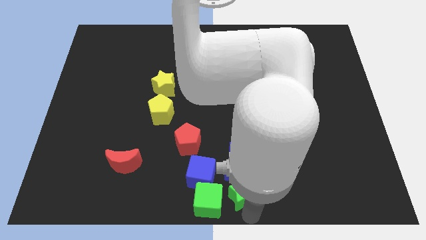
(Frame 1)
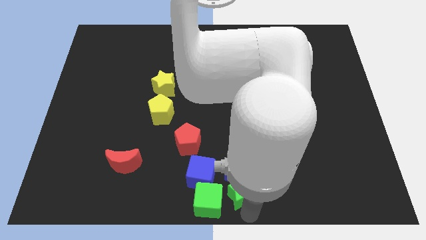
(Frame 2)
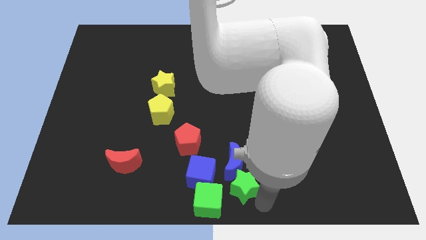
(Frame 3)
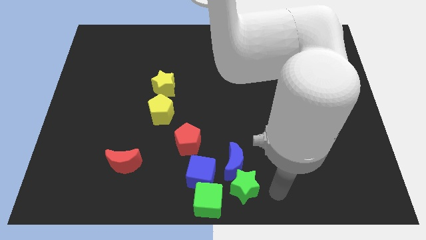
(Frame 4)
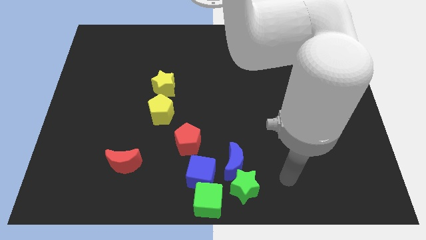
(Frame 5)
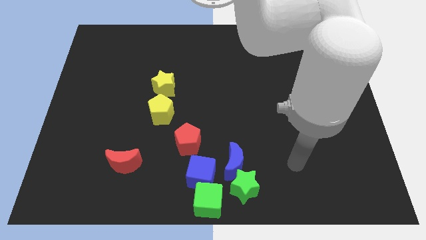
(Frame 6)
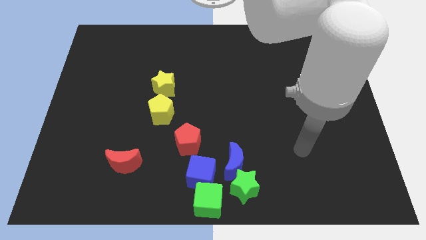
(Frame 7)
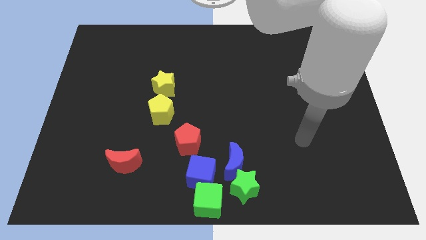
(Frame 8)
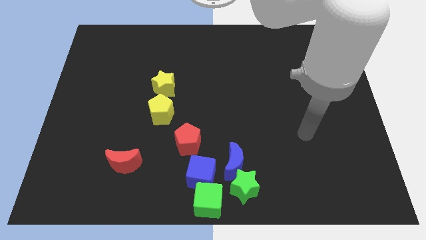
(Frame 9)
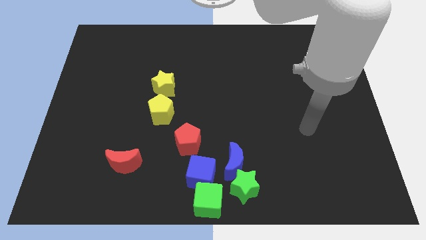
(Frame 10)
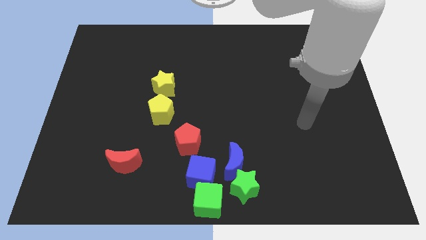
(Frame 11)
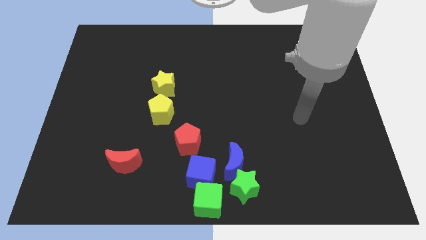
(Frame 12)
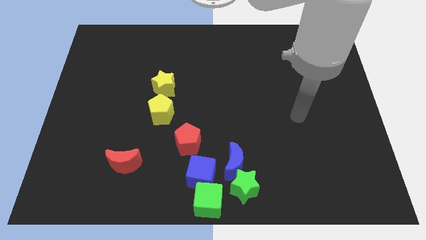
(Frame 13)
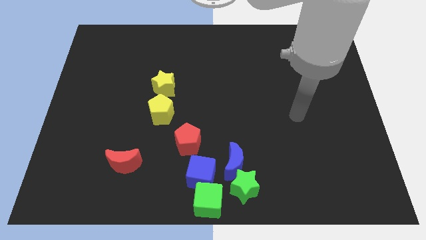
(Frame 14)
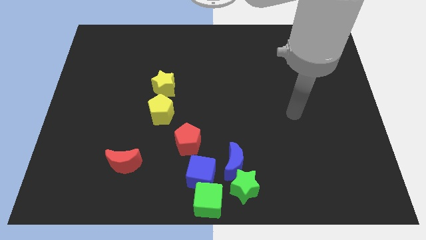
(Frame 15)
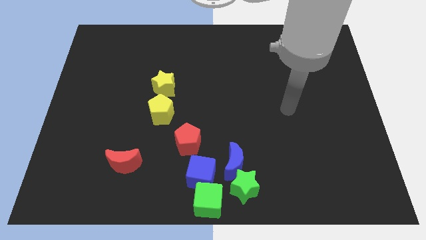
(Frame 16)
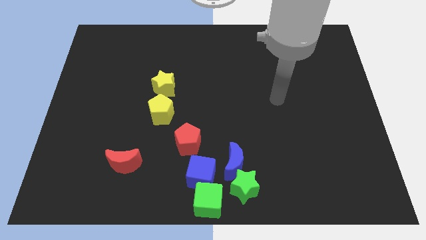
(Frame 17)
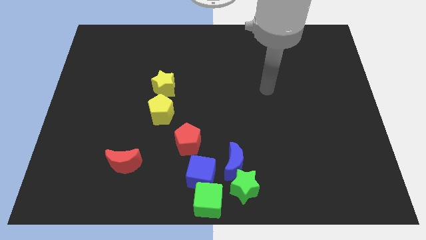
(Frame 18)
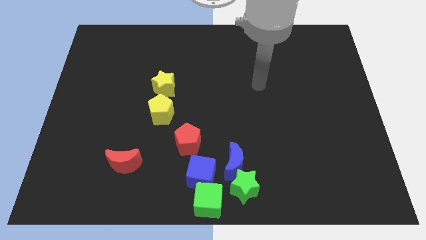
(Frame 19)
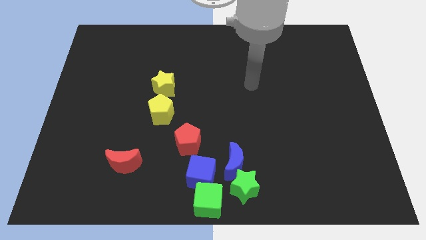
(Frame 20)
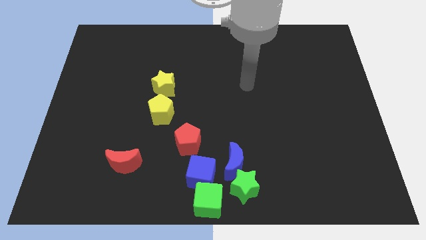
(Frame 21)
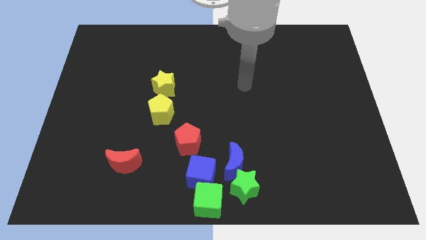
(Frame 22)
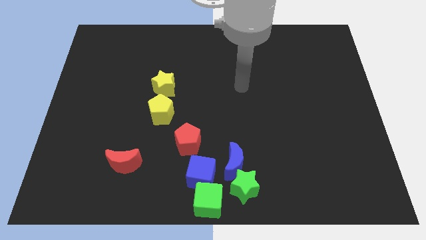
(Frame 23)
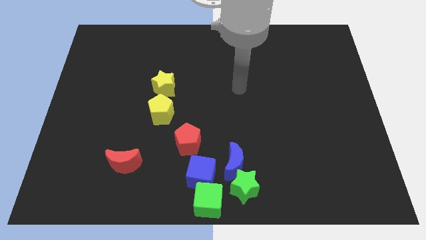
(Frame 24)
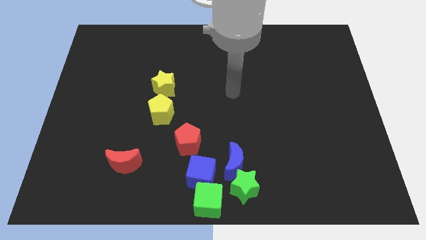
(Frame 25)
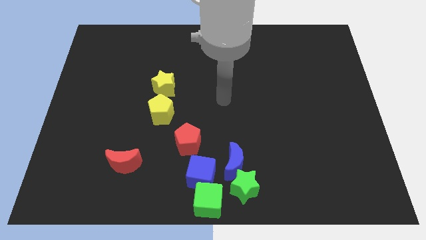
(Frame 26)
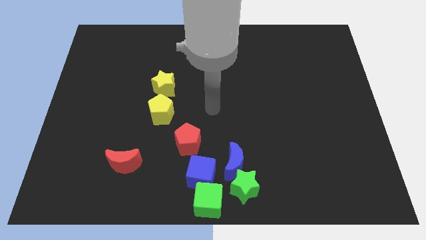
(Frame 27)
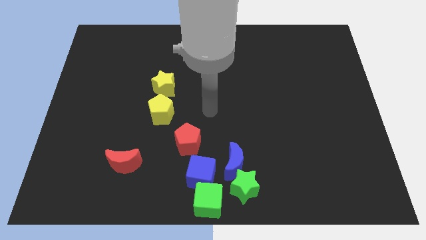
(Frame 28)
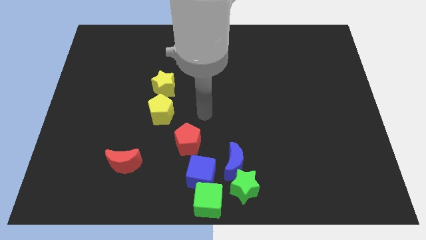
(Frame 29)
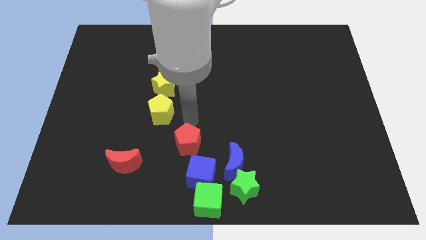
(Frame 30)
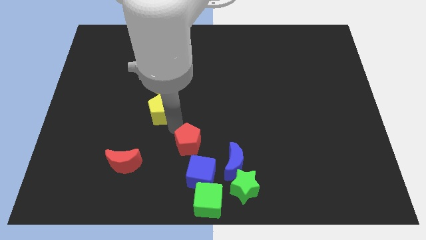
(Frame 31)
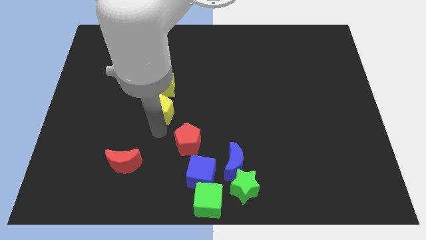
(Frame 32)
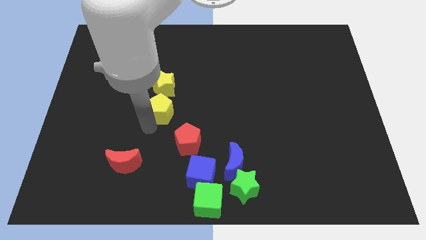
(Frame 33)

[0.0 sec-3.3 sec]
move your arm from the bottom center of the board

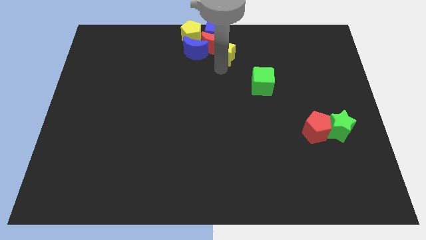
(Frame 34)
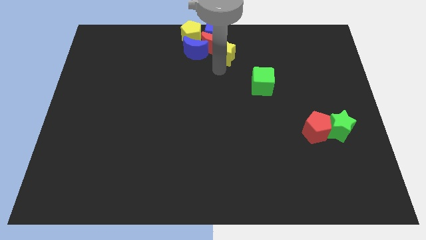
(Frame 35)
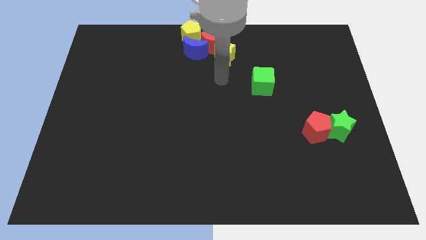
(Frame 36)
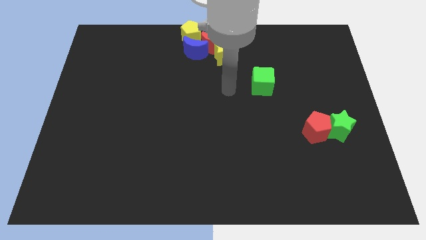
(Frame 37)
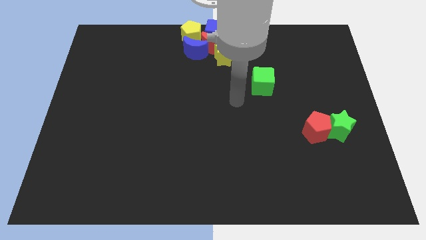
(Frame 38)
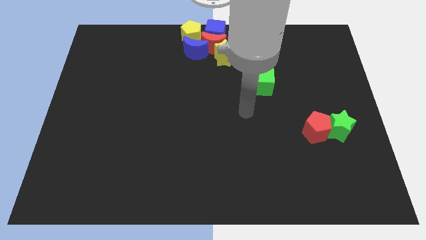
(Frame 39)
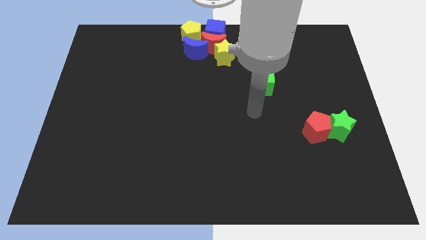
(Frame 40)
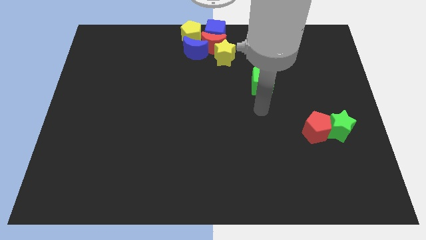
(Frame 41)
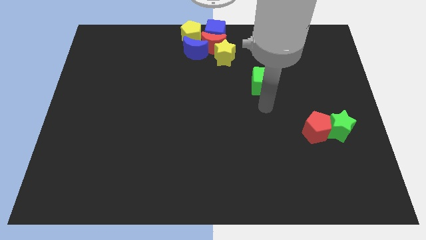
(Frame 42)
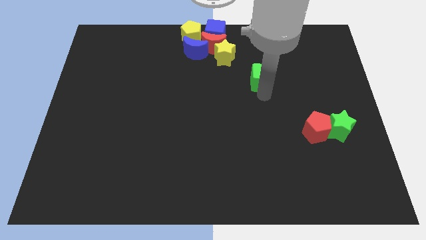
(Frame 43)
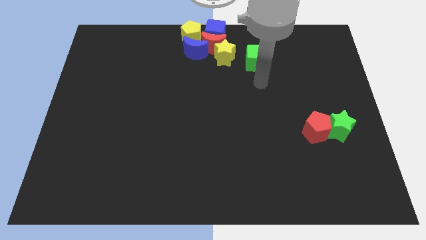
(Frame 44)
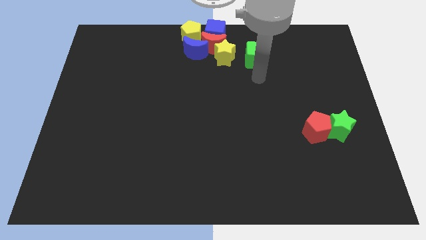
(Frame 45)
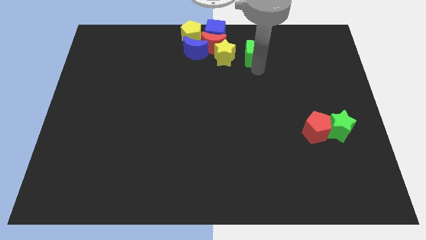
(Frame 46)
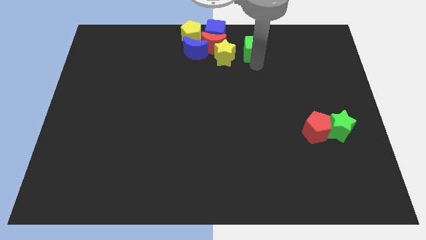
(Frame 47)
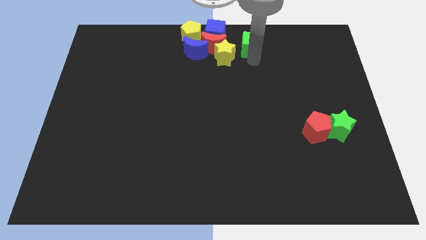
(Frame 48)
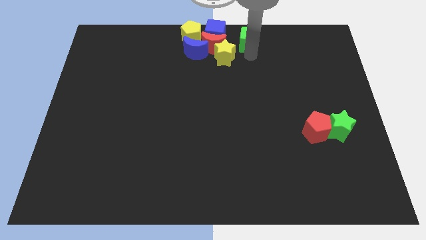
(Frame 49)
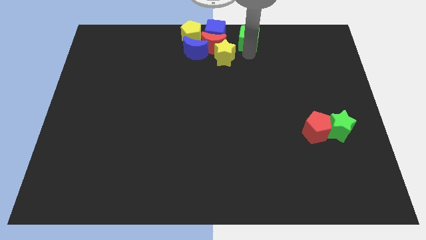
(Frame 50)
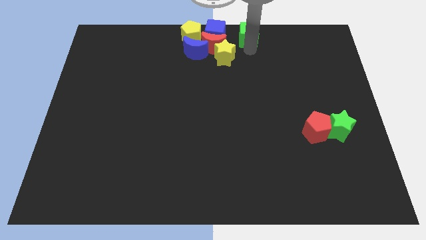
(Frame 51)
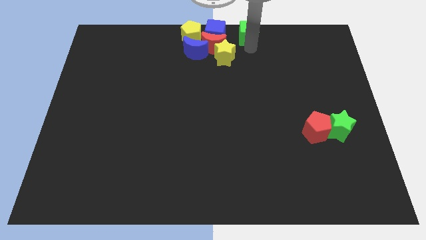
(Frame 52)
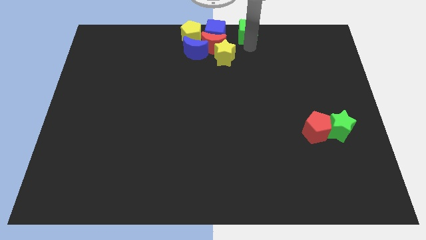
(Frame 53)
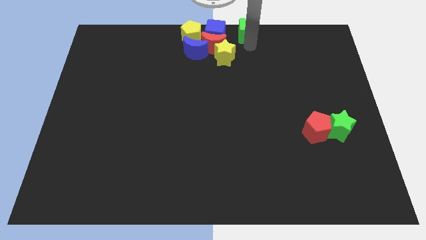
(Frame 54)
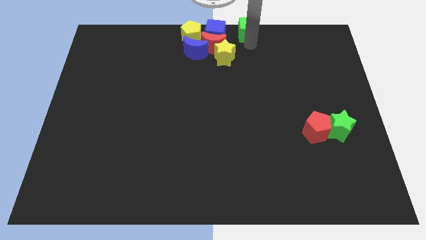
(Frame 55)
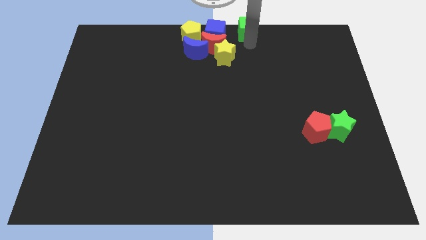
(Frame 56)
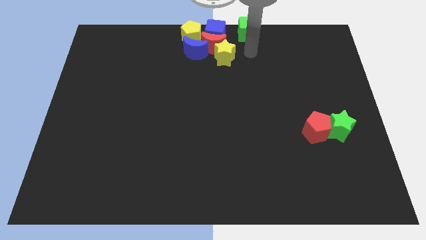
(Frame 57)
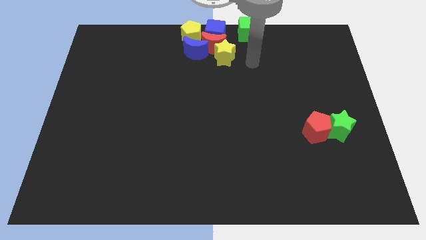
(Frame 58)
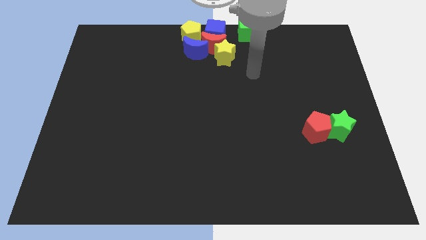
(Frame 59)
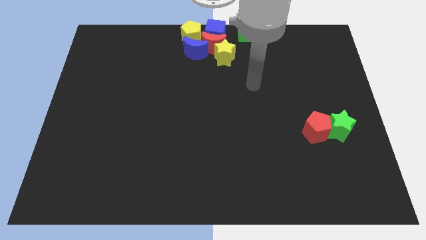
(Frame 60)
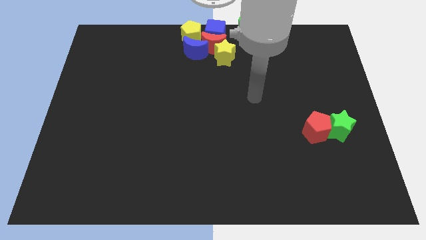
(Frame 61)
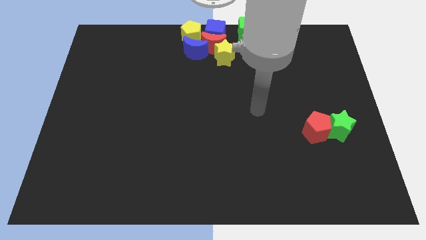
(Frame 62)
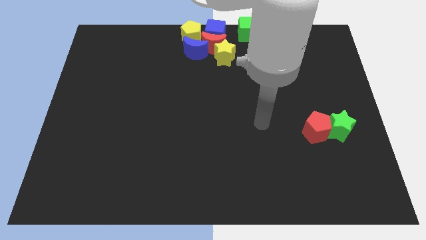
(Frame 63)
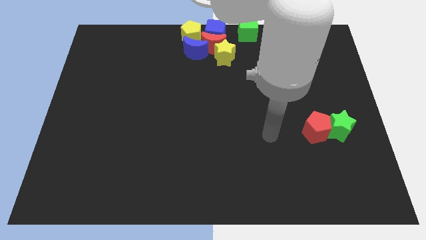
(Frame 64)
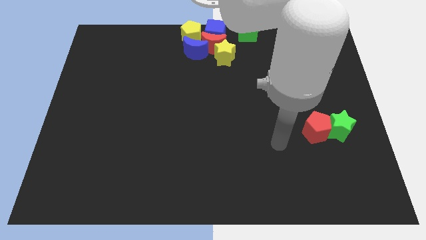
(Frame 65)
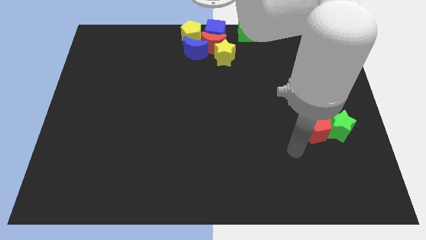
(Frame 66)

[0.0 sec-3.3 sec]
push the green cube to the right of the blue cube

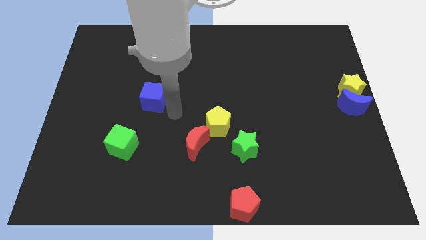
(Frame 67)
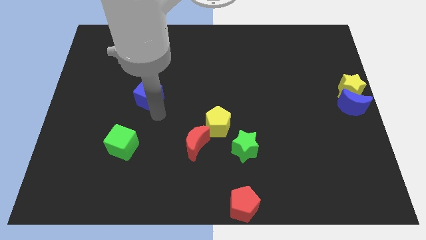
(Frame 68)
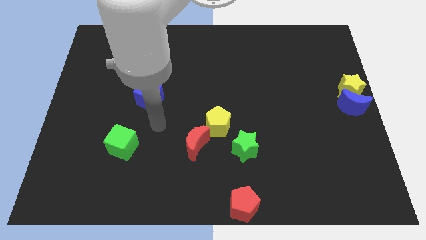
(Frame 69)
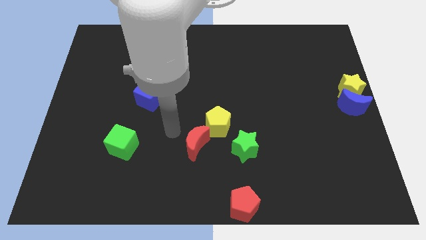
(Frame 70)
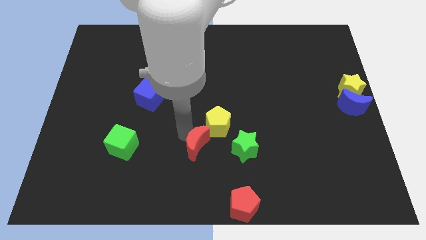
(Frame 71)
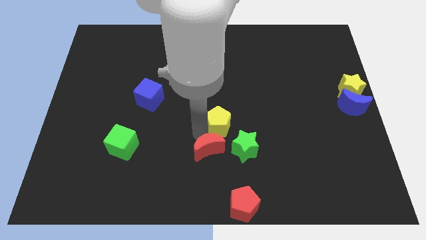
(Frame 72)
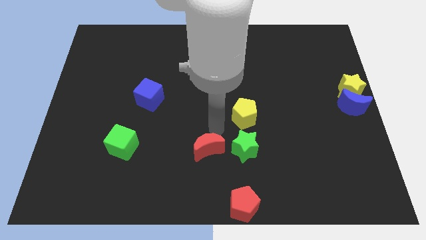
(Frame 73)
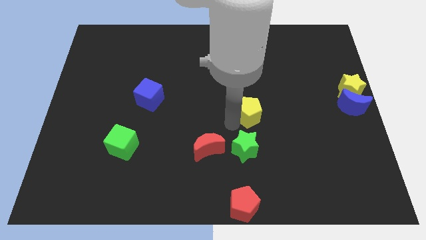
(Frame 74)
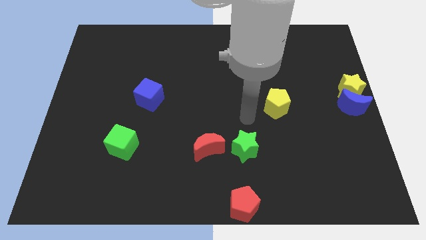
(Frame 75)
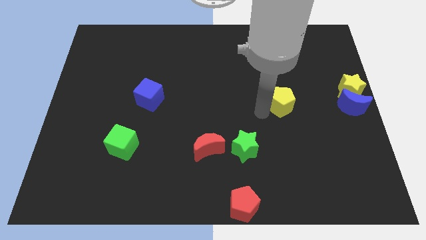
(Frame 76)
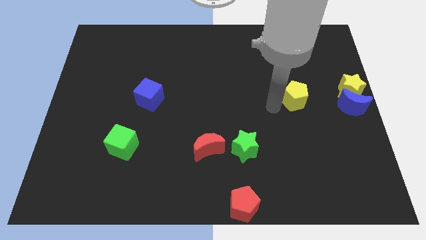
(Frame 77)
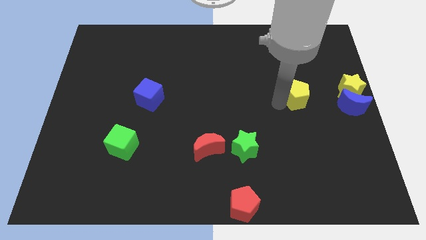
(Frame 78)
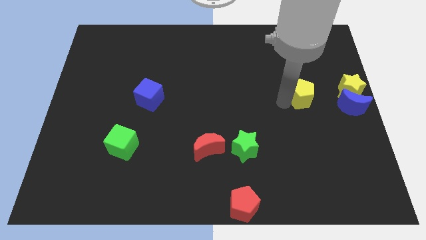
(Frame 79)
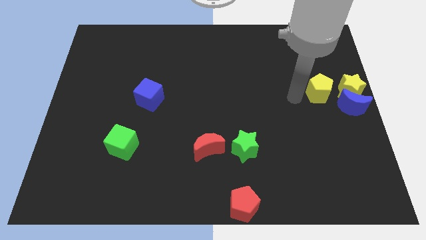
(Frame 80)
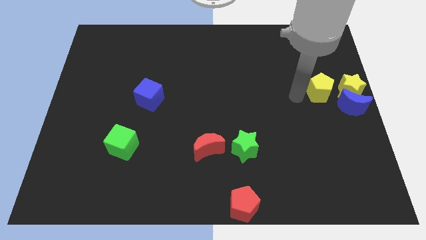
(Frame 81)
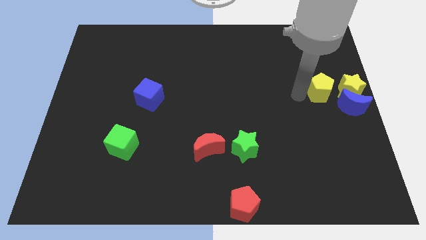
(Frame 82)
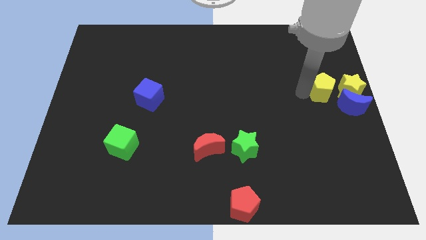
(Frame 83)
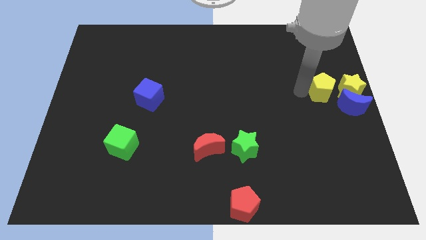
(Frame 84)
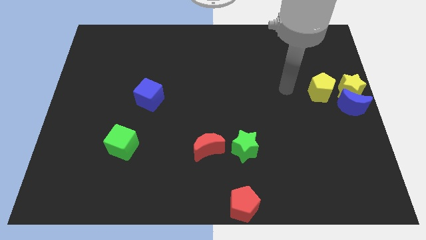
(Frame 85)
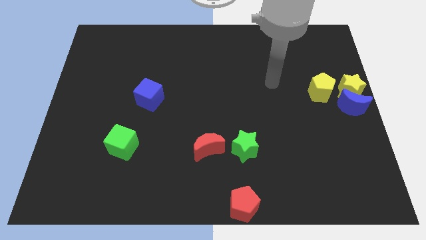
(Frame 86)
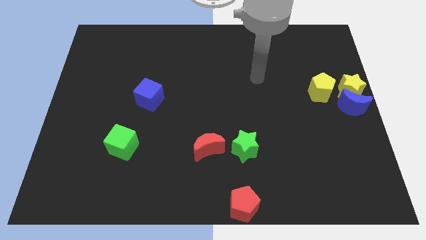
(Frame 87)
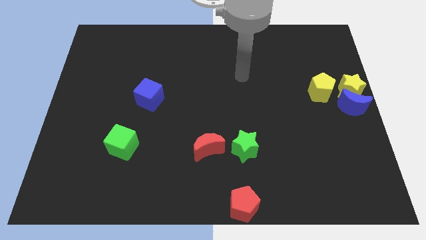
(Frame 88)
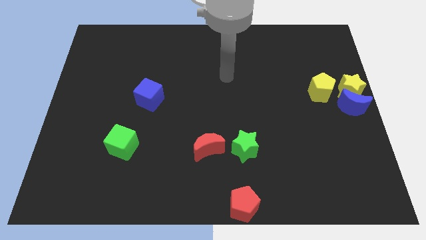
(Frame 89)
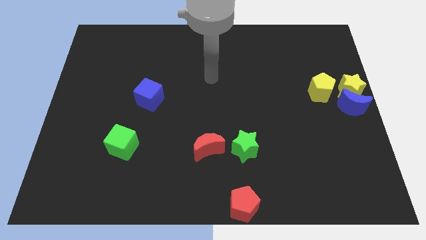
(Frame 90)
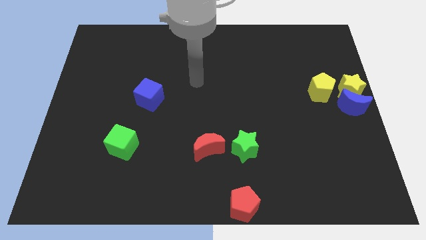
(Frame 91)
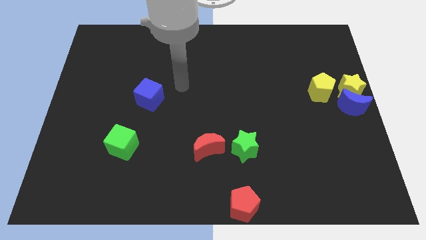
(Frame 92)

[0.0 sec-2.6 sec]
slide the yellow pentagon close to the yellow star
